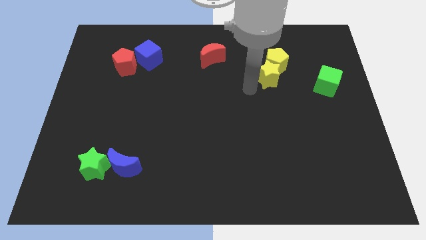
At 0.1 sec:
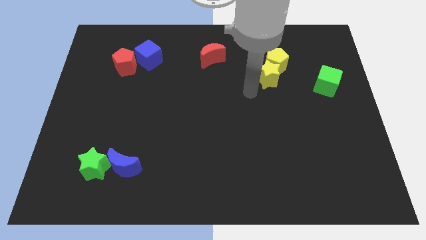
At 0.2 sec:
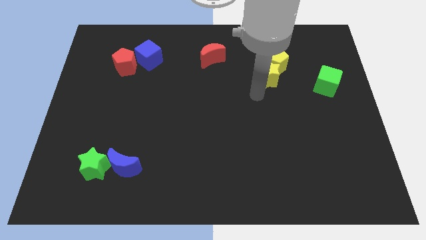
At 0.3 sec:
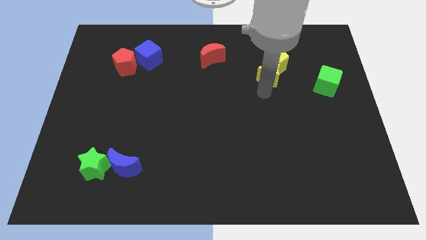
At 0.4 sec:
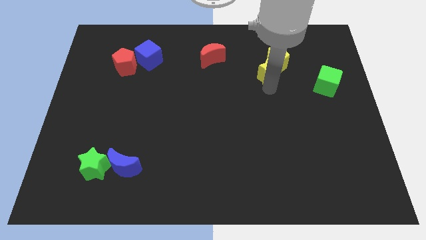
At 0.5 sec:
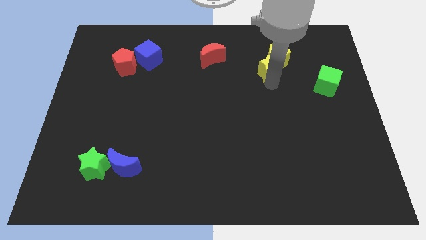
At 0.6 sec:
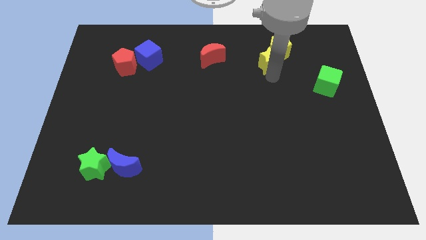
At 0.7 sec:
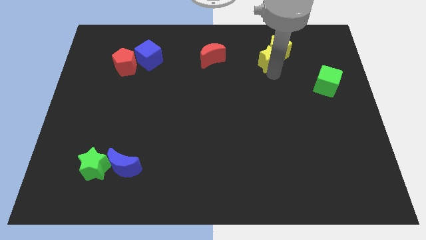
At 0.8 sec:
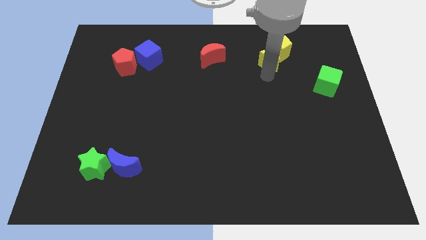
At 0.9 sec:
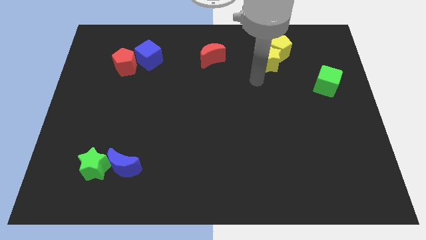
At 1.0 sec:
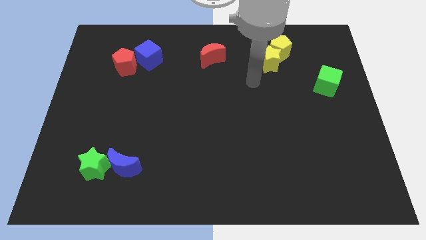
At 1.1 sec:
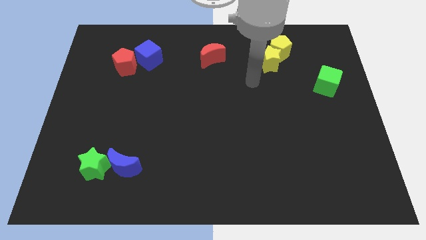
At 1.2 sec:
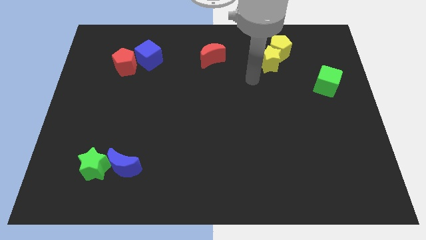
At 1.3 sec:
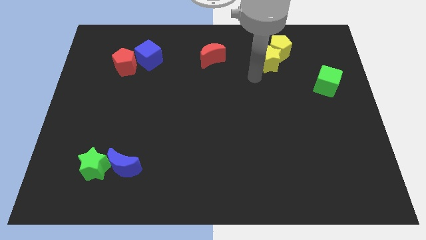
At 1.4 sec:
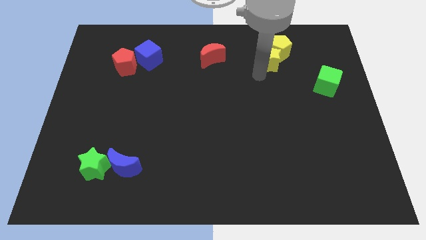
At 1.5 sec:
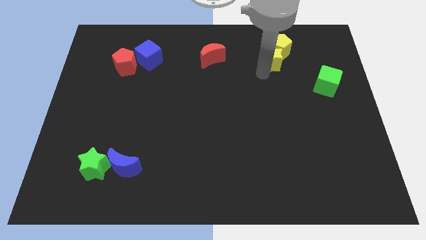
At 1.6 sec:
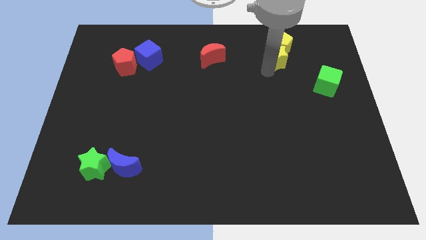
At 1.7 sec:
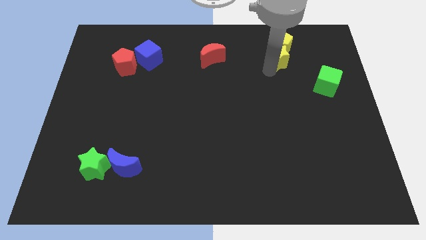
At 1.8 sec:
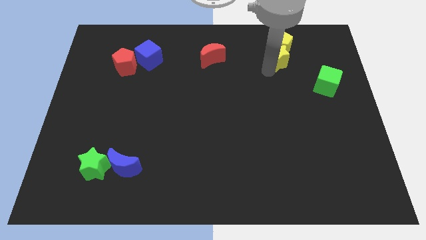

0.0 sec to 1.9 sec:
push the yellow blocks to the upwards slightly

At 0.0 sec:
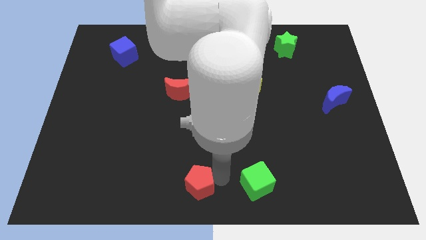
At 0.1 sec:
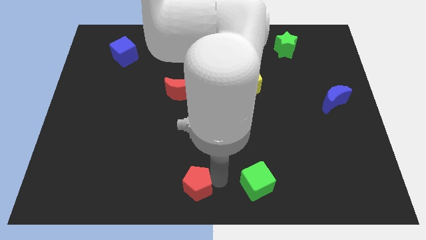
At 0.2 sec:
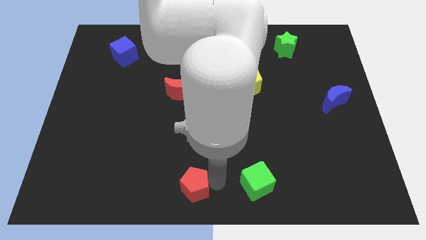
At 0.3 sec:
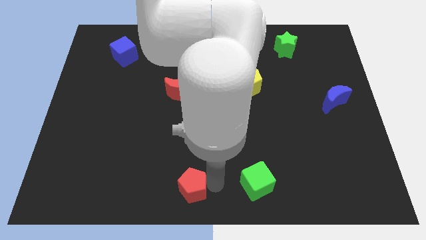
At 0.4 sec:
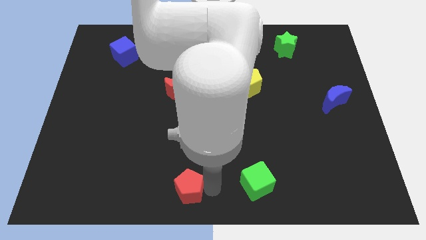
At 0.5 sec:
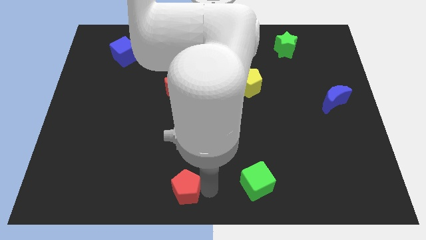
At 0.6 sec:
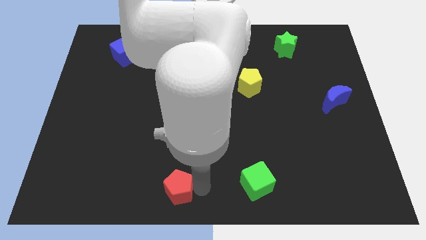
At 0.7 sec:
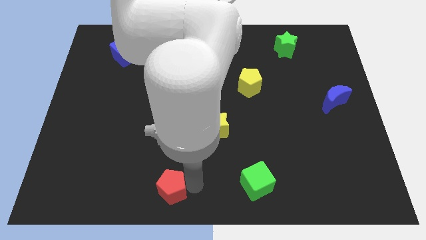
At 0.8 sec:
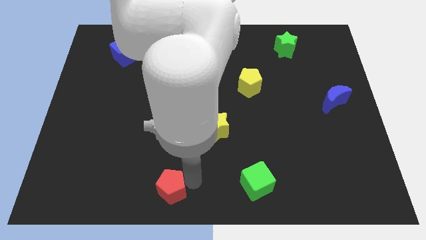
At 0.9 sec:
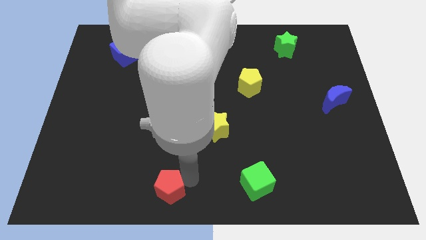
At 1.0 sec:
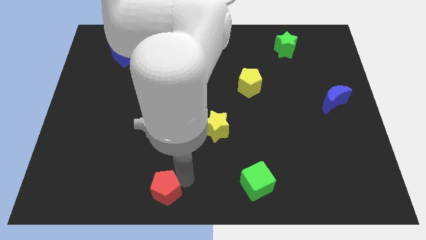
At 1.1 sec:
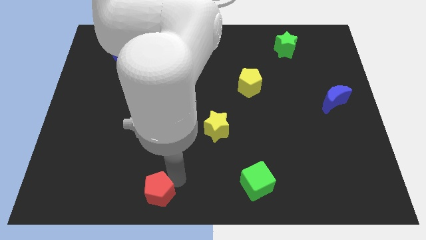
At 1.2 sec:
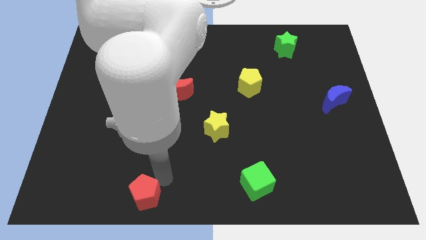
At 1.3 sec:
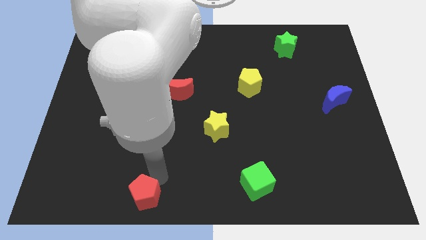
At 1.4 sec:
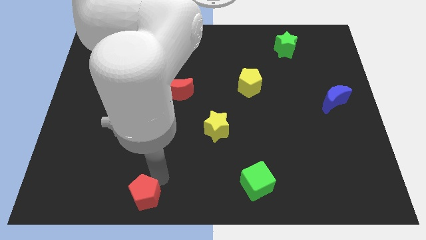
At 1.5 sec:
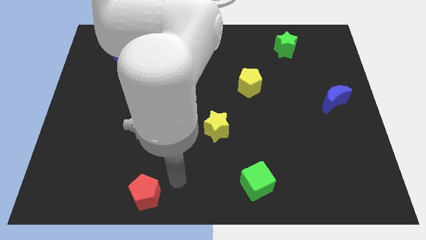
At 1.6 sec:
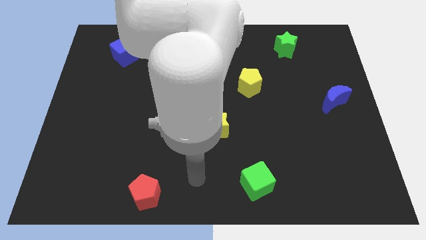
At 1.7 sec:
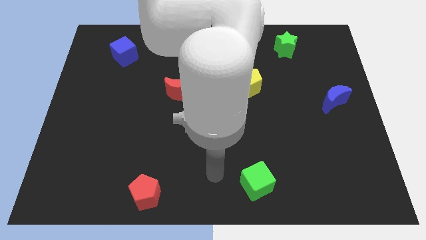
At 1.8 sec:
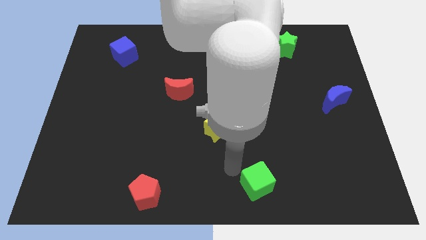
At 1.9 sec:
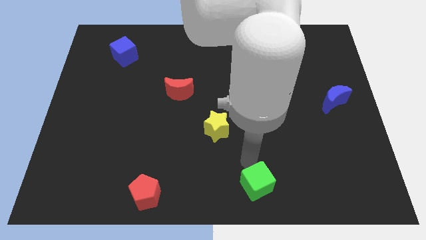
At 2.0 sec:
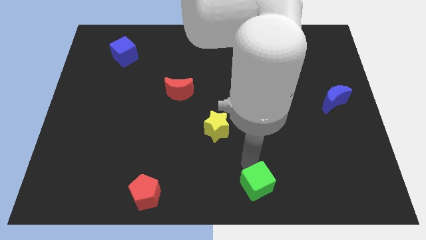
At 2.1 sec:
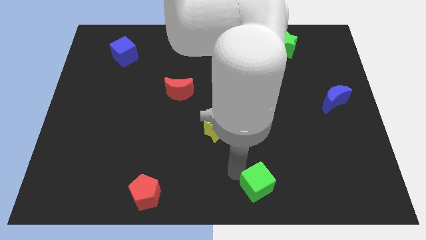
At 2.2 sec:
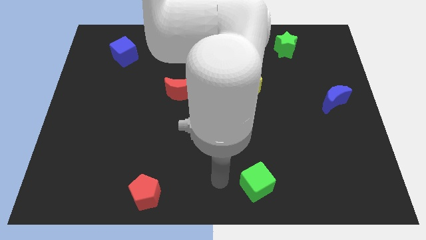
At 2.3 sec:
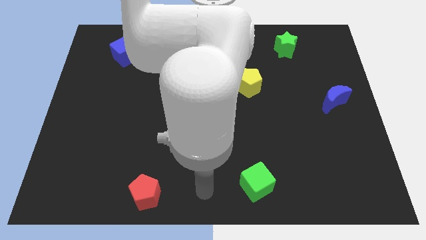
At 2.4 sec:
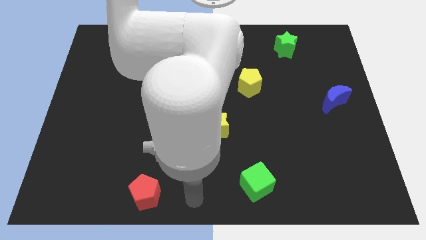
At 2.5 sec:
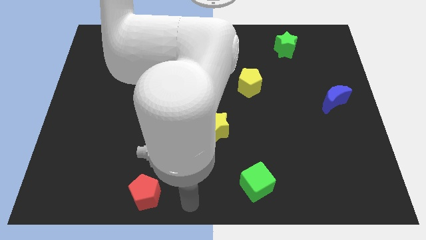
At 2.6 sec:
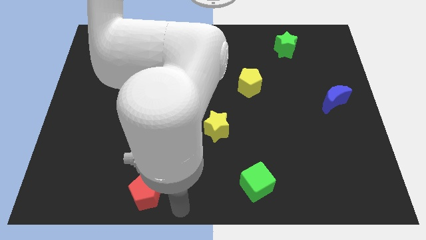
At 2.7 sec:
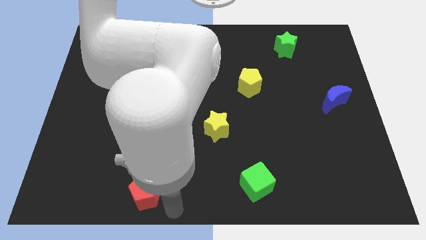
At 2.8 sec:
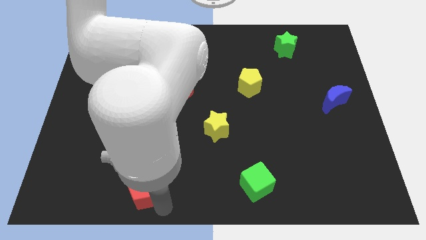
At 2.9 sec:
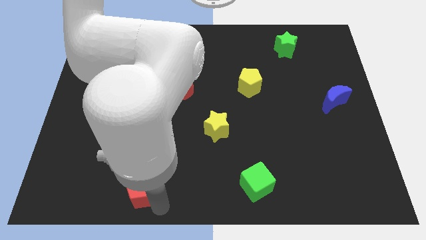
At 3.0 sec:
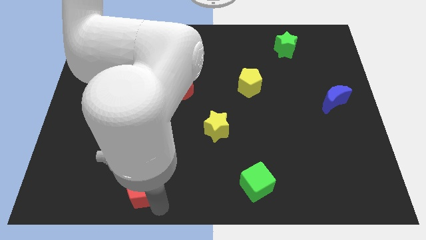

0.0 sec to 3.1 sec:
push the red pentagon towards the left side

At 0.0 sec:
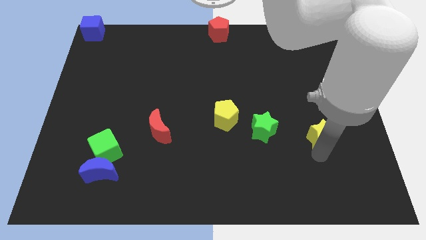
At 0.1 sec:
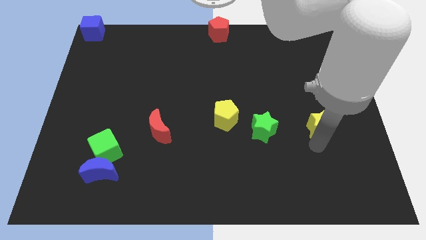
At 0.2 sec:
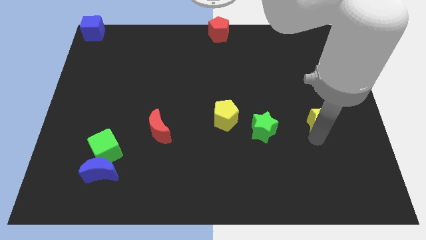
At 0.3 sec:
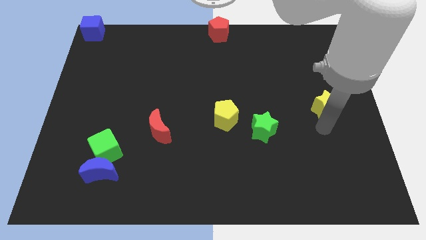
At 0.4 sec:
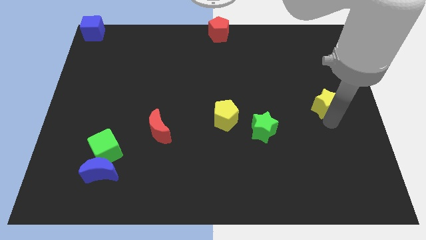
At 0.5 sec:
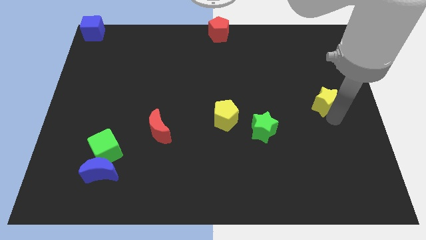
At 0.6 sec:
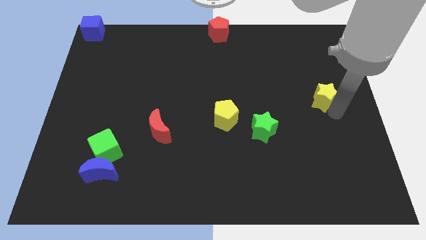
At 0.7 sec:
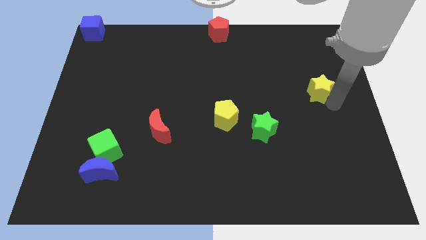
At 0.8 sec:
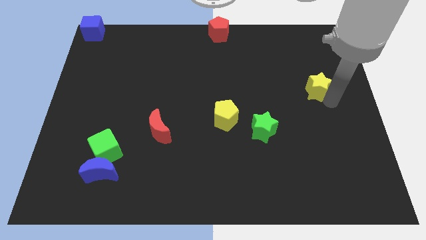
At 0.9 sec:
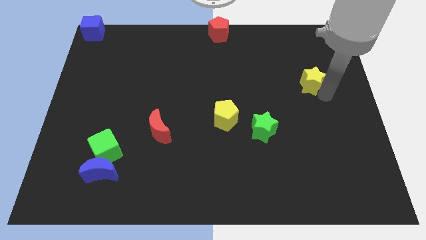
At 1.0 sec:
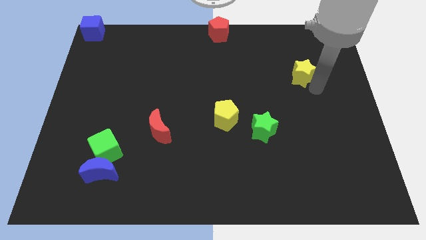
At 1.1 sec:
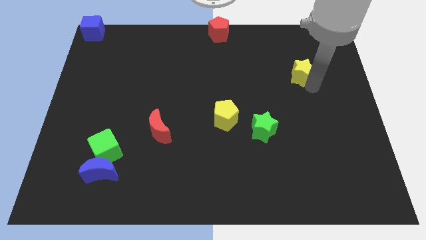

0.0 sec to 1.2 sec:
push the yellow star slightly towards up

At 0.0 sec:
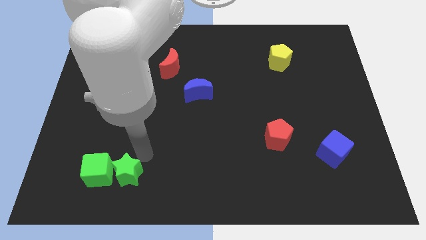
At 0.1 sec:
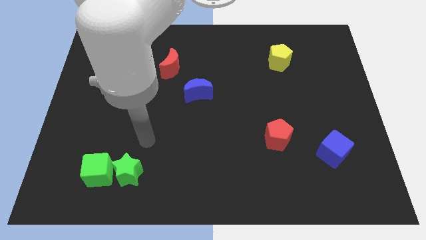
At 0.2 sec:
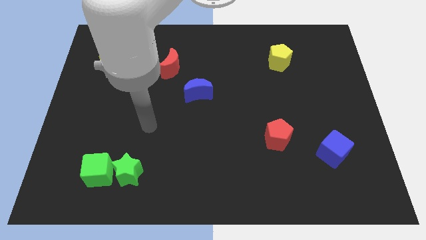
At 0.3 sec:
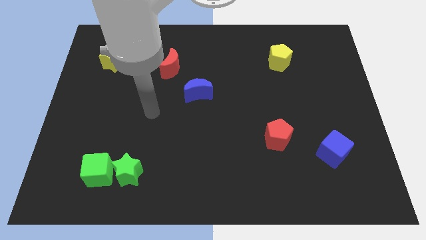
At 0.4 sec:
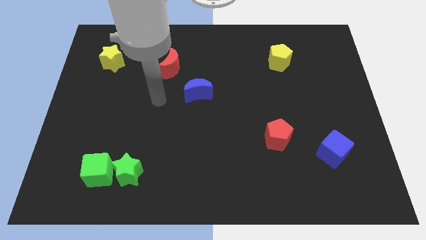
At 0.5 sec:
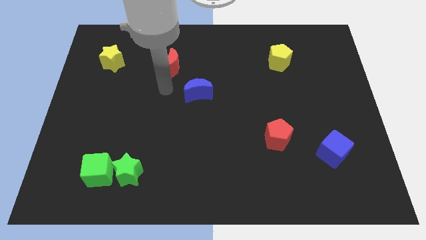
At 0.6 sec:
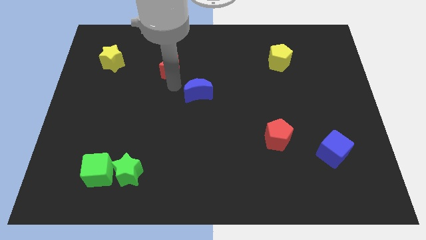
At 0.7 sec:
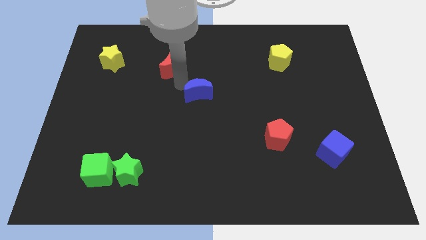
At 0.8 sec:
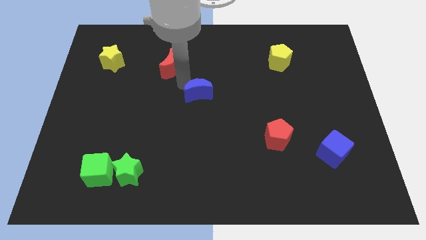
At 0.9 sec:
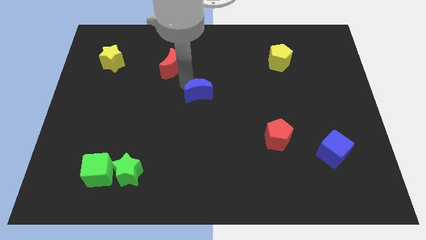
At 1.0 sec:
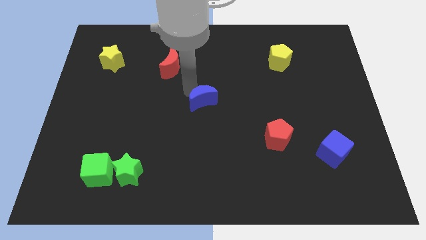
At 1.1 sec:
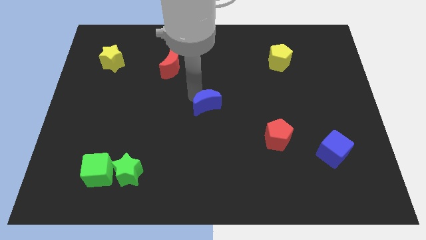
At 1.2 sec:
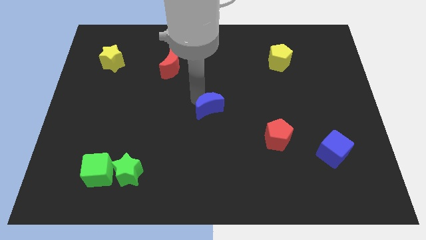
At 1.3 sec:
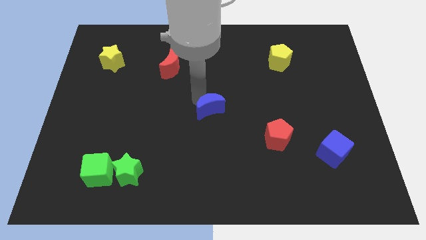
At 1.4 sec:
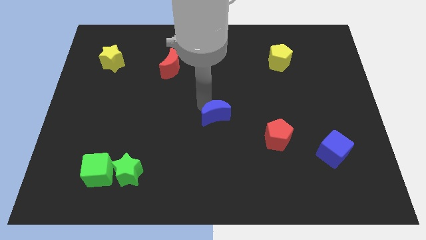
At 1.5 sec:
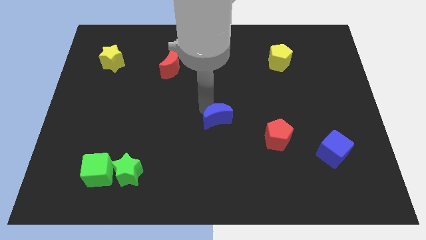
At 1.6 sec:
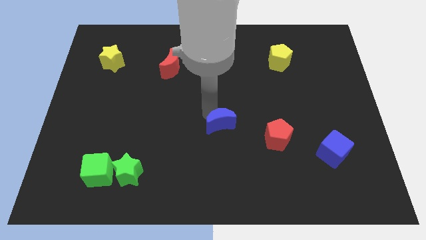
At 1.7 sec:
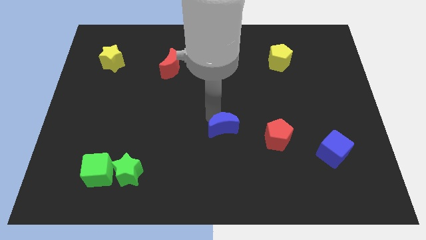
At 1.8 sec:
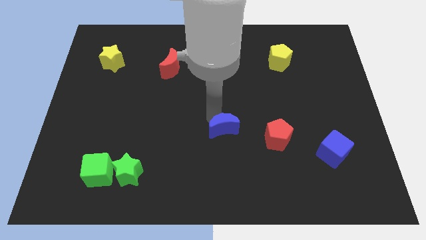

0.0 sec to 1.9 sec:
push the blue moon downward

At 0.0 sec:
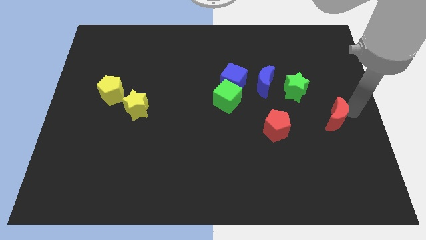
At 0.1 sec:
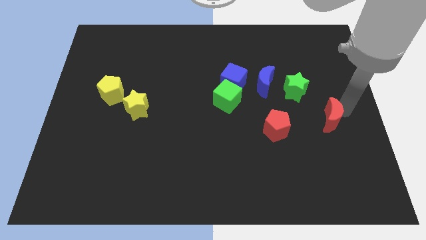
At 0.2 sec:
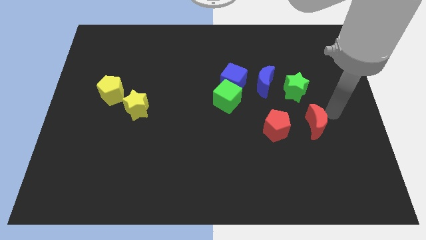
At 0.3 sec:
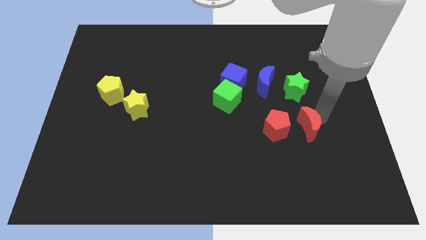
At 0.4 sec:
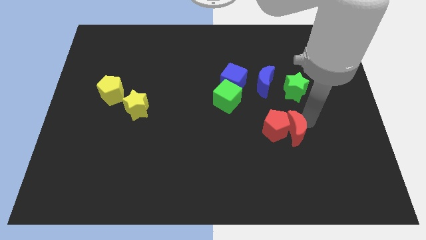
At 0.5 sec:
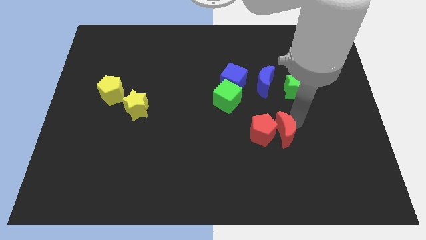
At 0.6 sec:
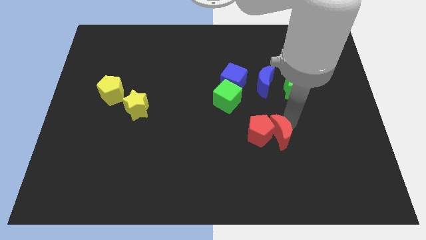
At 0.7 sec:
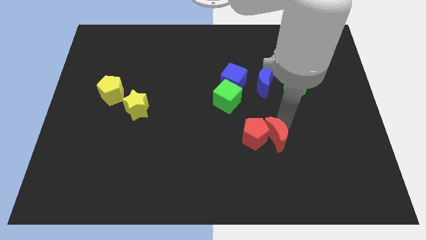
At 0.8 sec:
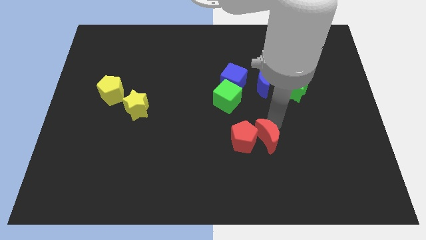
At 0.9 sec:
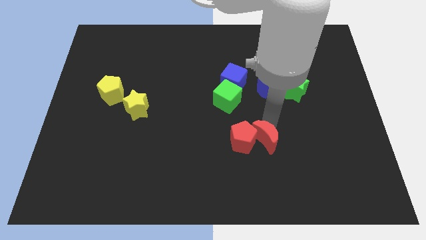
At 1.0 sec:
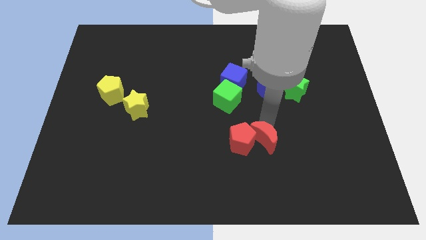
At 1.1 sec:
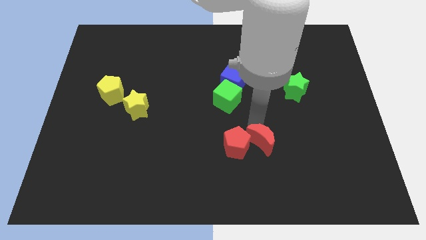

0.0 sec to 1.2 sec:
slide the red moon into the red pentagon
